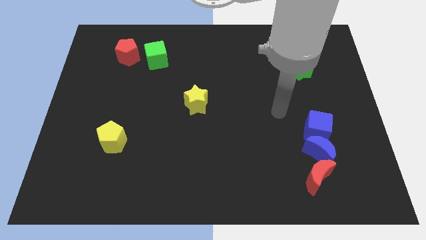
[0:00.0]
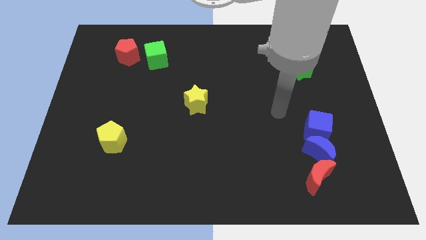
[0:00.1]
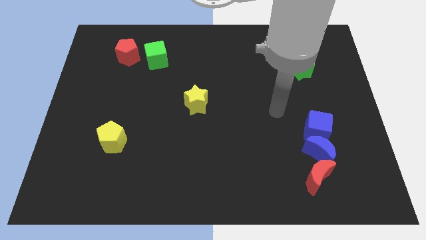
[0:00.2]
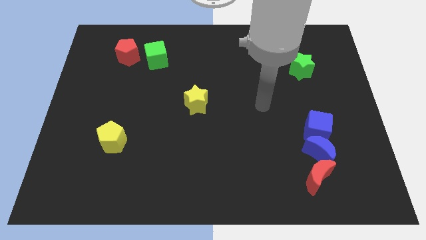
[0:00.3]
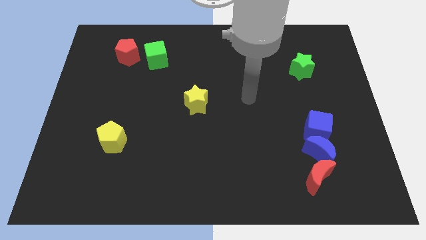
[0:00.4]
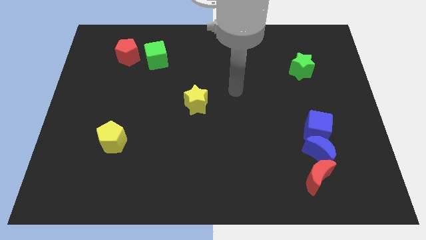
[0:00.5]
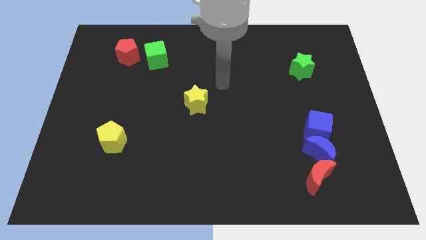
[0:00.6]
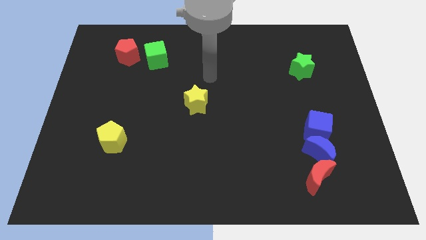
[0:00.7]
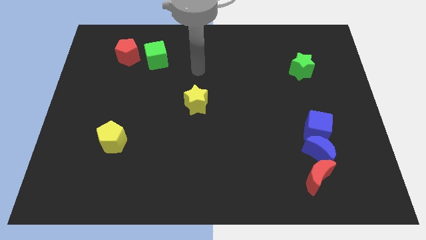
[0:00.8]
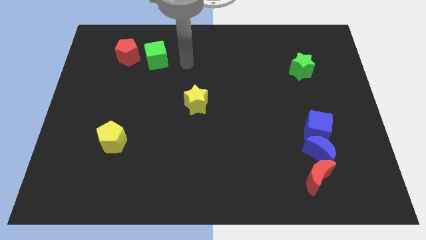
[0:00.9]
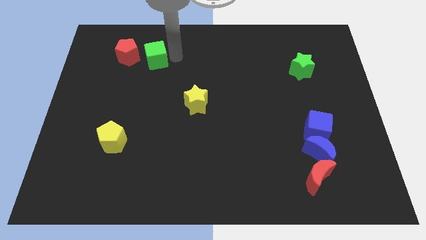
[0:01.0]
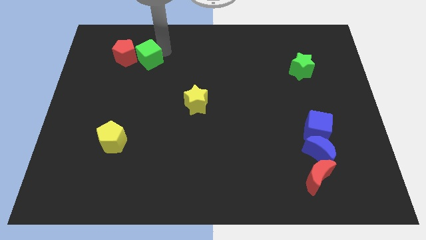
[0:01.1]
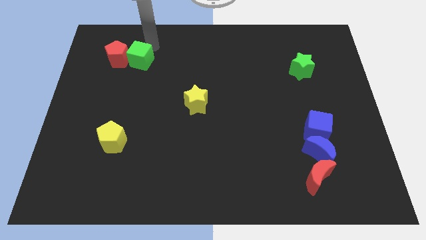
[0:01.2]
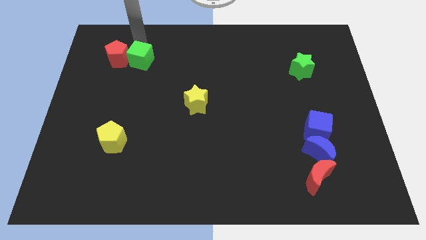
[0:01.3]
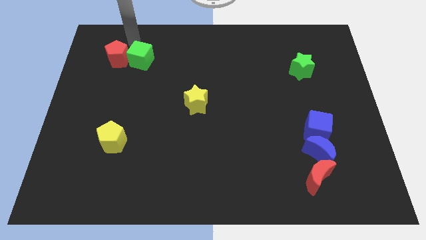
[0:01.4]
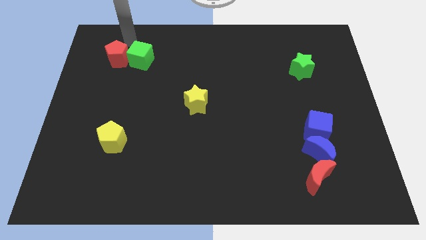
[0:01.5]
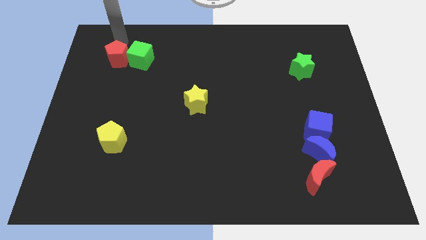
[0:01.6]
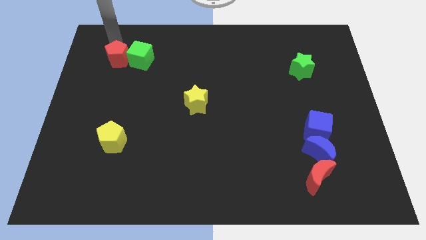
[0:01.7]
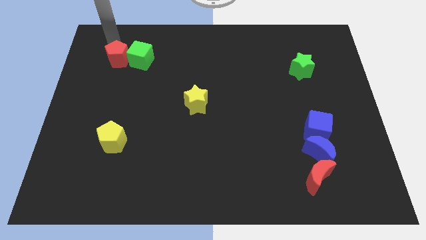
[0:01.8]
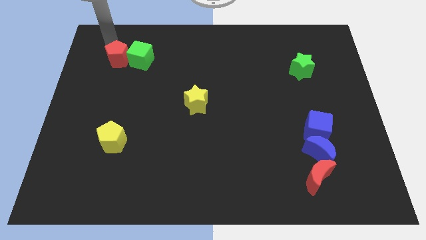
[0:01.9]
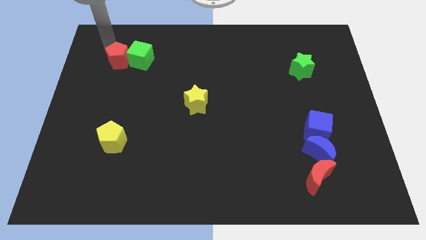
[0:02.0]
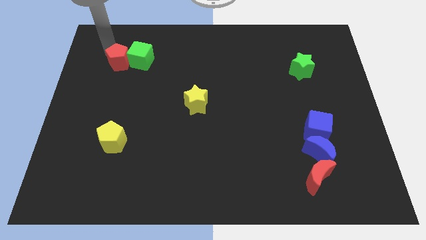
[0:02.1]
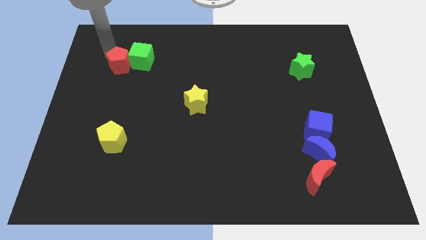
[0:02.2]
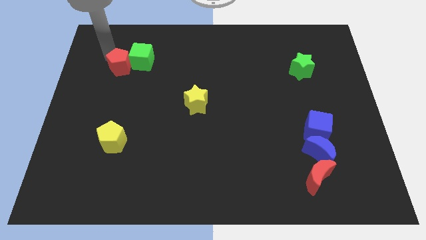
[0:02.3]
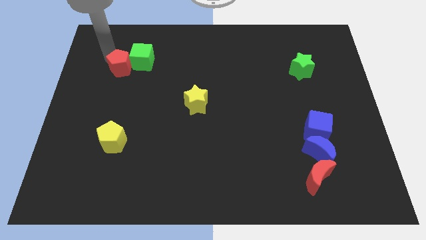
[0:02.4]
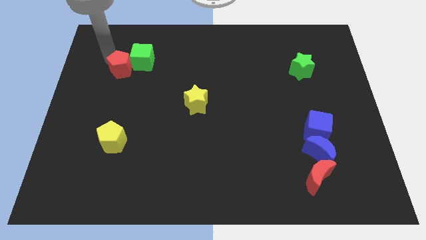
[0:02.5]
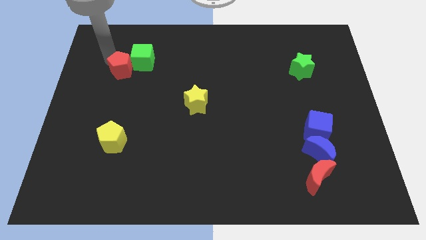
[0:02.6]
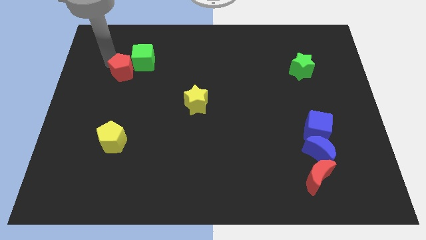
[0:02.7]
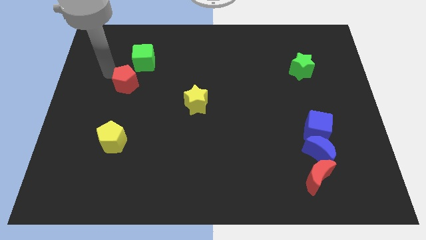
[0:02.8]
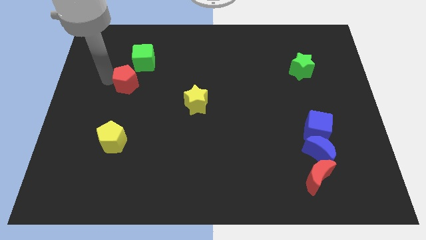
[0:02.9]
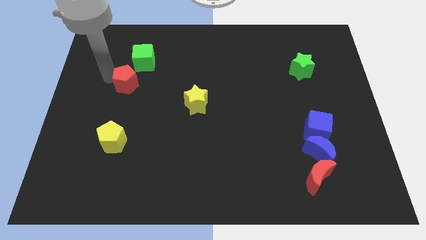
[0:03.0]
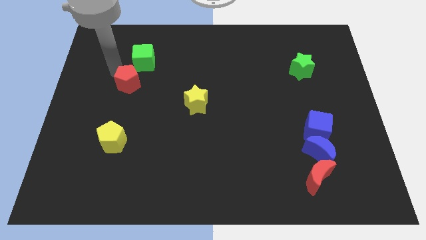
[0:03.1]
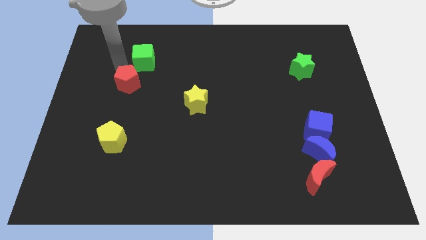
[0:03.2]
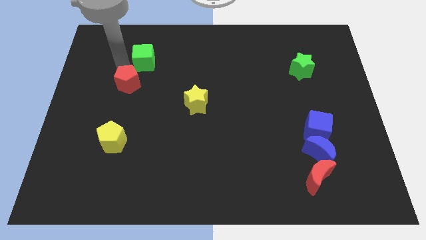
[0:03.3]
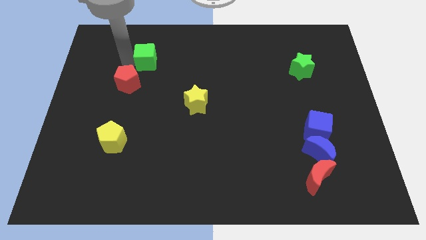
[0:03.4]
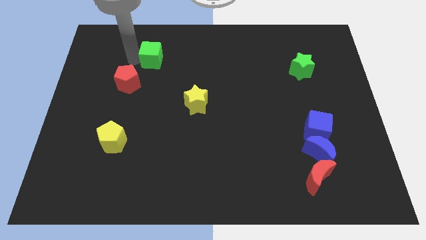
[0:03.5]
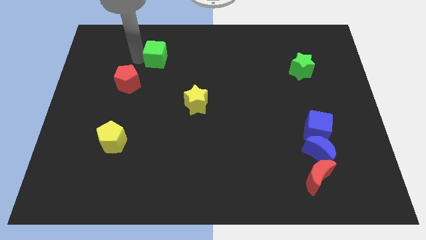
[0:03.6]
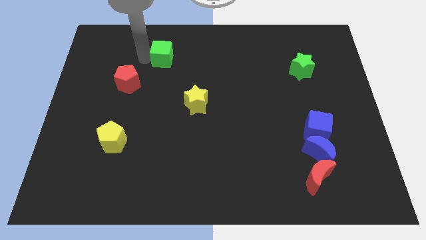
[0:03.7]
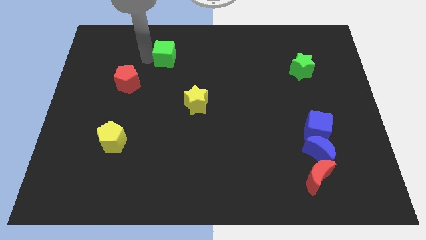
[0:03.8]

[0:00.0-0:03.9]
separate the red pentagon and green cube

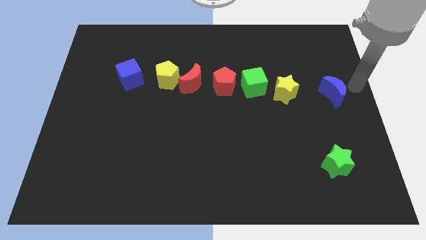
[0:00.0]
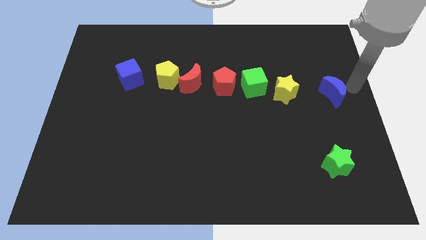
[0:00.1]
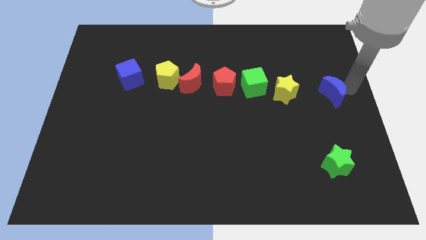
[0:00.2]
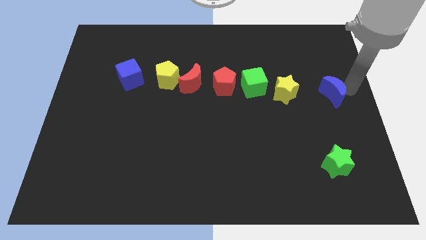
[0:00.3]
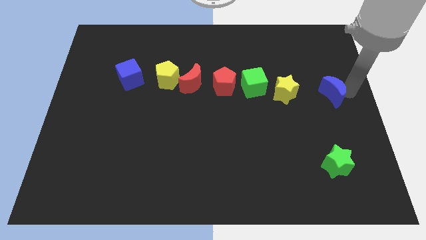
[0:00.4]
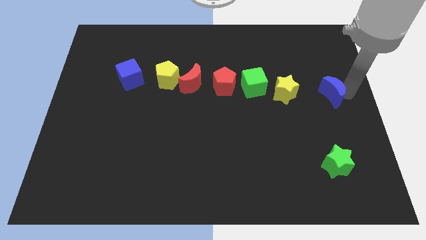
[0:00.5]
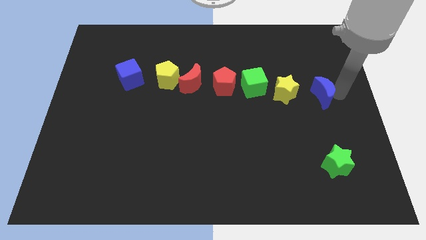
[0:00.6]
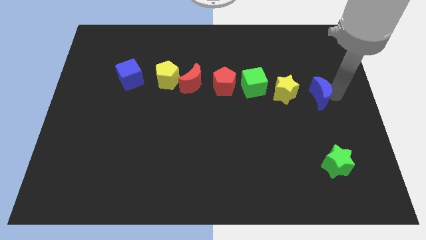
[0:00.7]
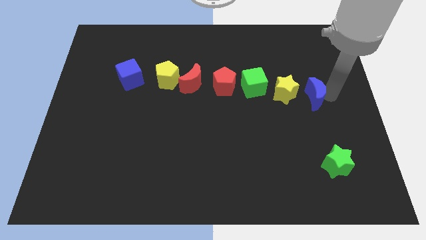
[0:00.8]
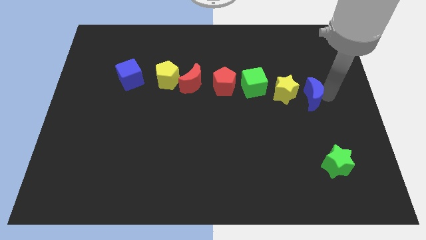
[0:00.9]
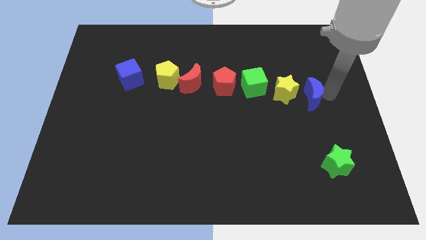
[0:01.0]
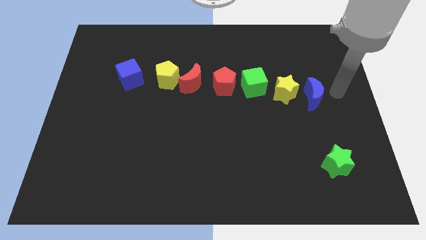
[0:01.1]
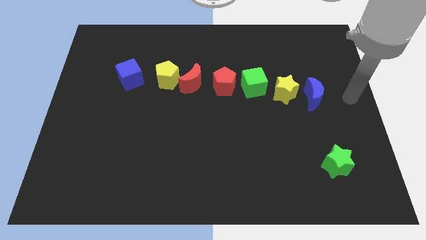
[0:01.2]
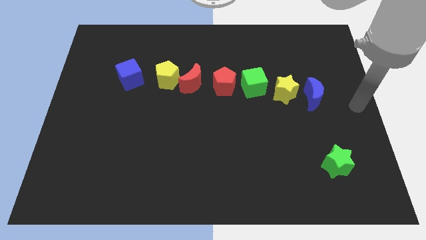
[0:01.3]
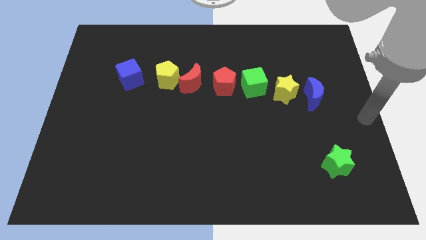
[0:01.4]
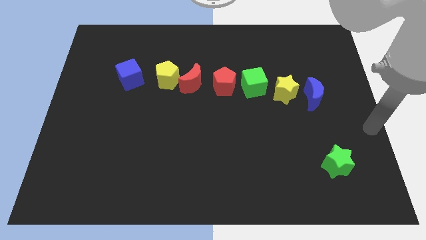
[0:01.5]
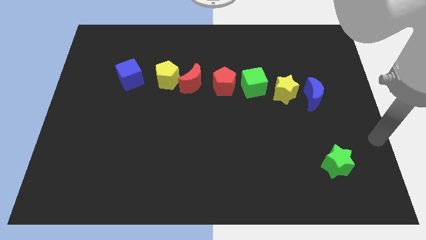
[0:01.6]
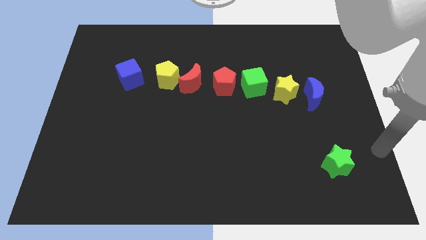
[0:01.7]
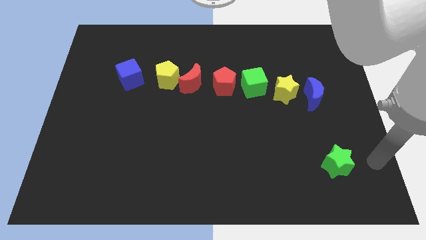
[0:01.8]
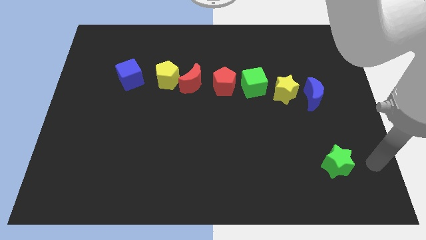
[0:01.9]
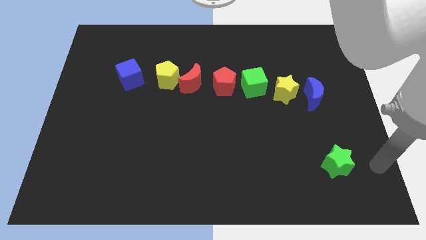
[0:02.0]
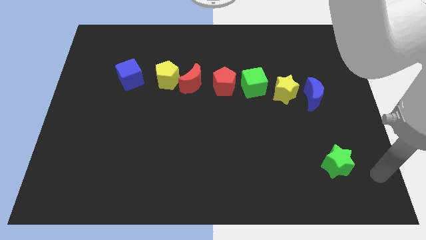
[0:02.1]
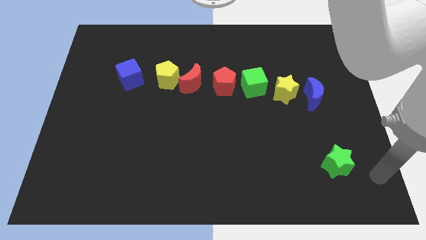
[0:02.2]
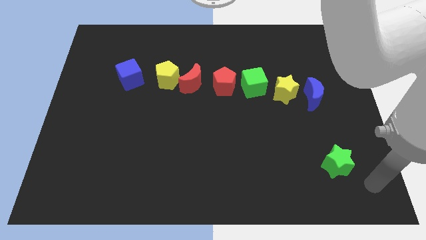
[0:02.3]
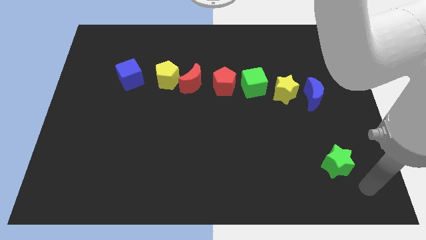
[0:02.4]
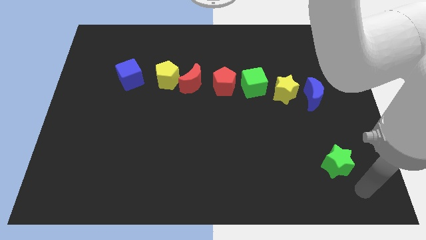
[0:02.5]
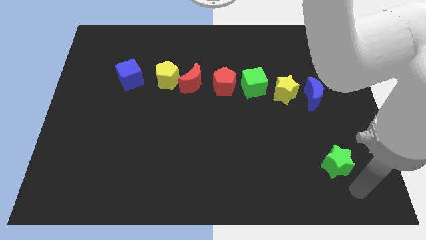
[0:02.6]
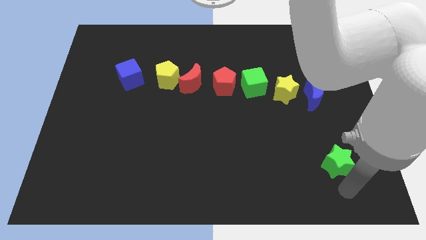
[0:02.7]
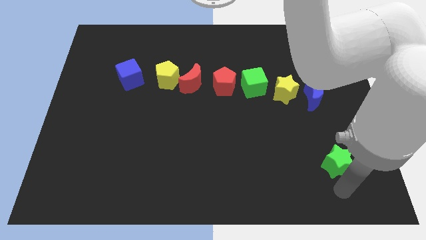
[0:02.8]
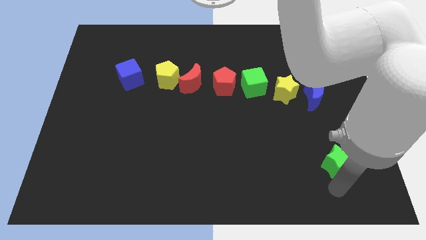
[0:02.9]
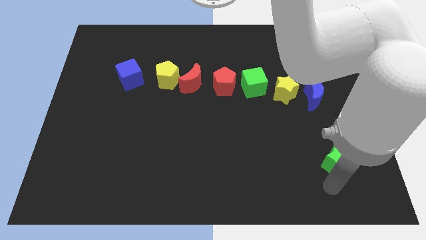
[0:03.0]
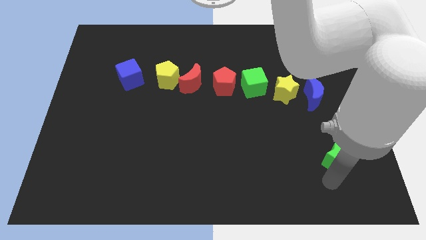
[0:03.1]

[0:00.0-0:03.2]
push blue moon to the right of the yellow star

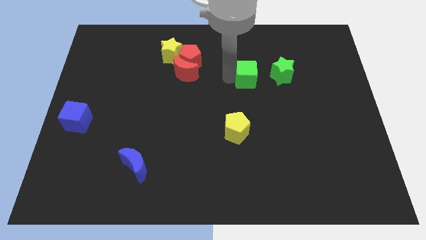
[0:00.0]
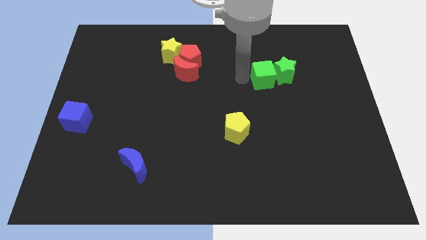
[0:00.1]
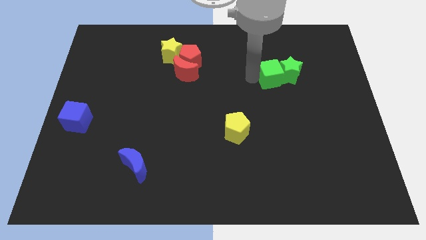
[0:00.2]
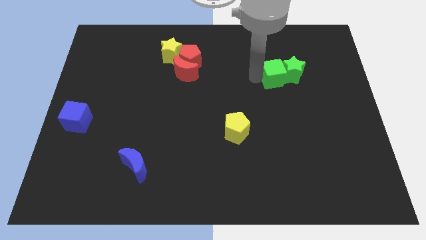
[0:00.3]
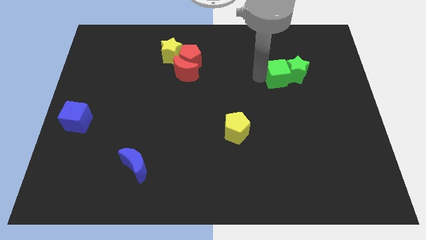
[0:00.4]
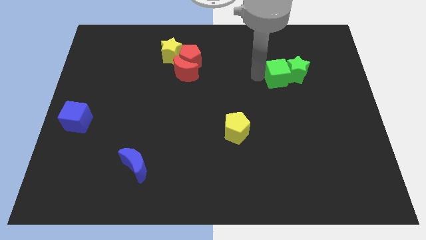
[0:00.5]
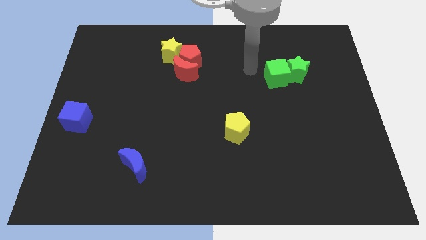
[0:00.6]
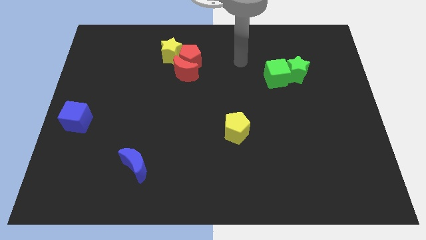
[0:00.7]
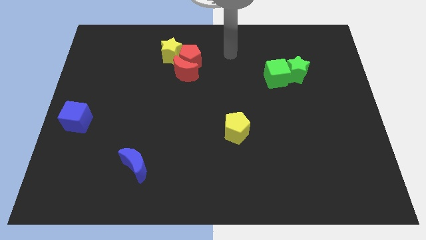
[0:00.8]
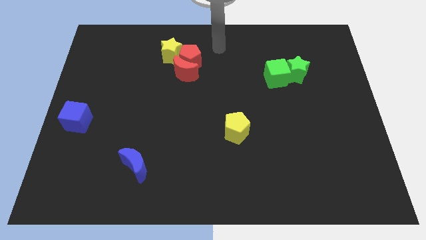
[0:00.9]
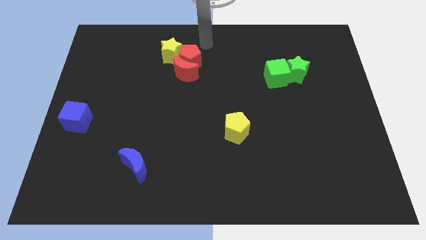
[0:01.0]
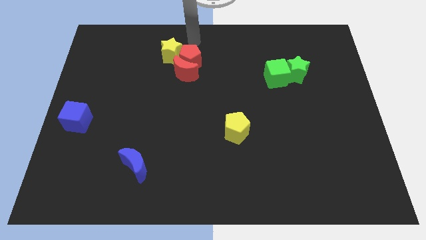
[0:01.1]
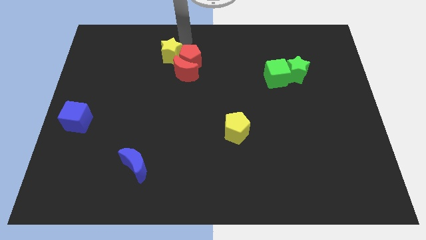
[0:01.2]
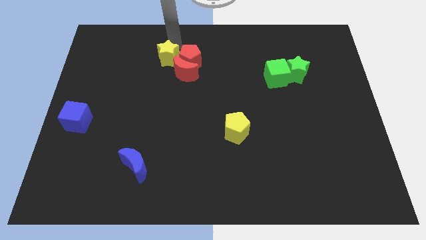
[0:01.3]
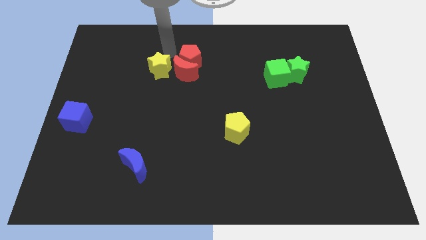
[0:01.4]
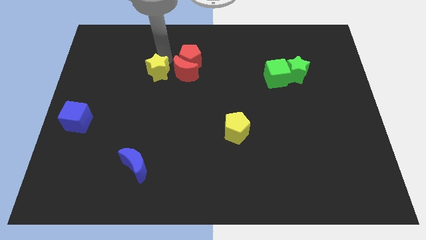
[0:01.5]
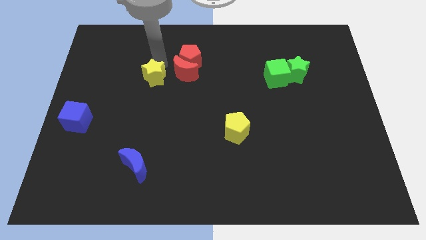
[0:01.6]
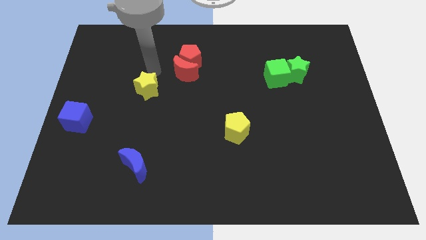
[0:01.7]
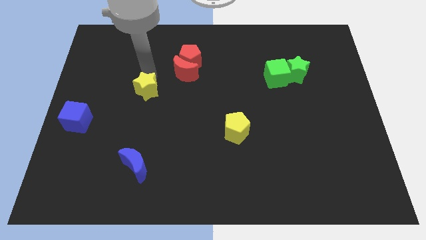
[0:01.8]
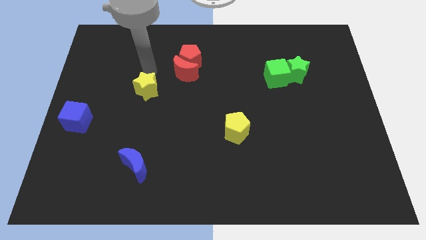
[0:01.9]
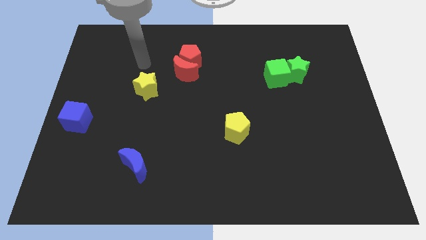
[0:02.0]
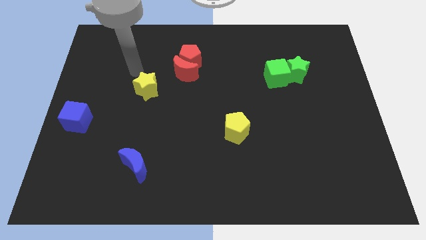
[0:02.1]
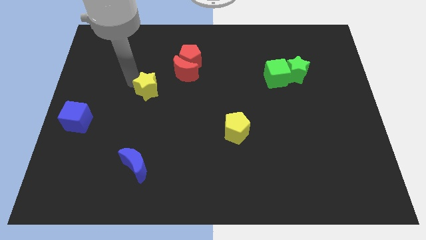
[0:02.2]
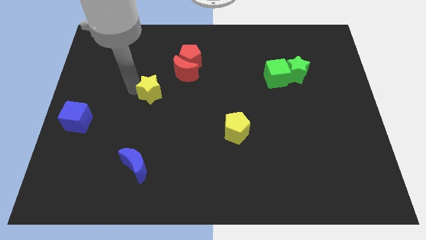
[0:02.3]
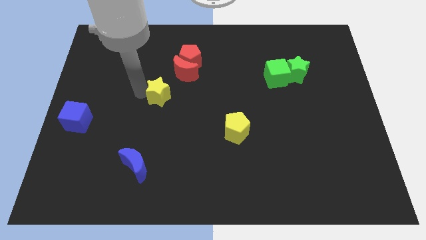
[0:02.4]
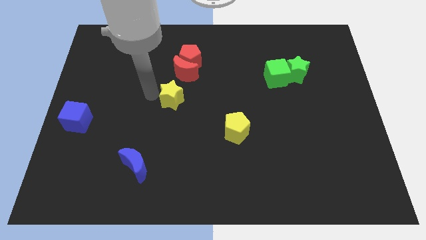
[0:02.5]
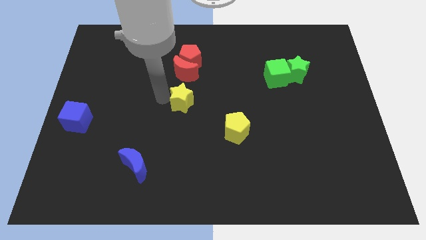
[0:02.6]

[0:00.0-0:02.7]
separate the yellow star from the red pentagon
